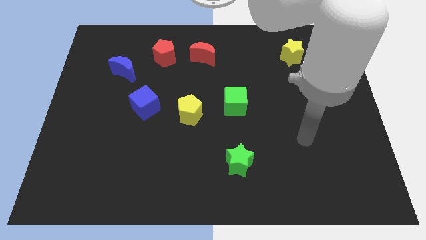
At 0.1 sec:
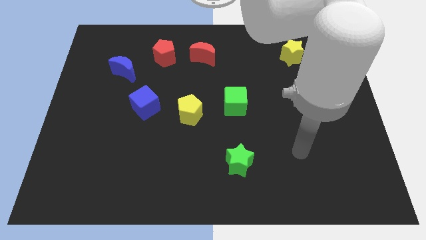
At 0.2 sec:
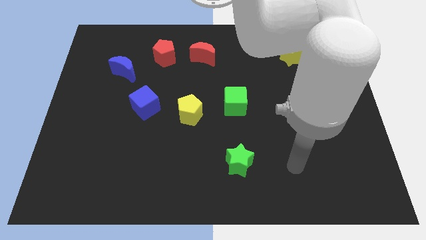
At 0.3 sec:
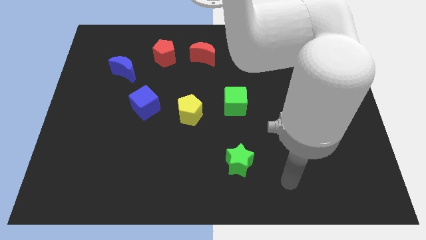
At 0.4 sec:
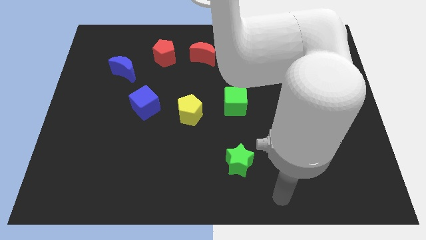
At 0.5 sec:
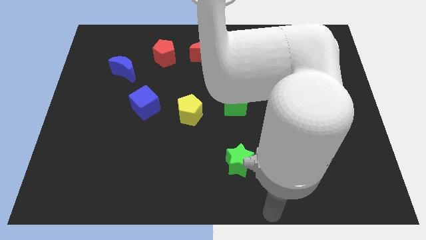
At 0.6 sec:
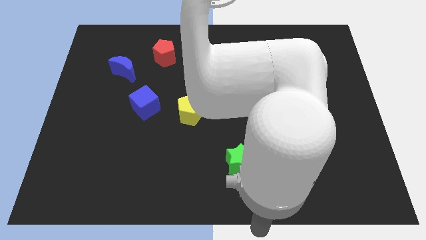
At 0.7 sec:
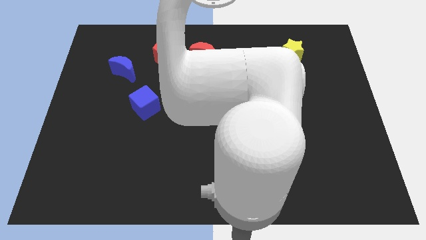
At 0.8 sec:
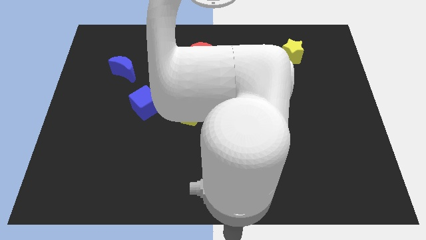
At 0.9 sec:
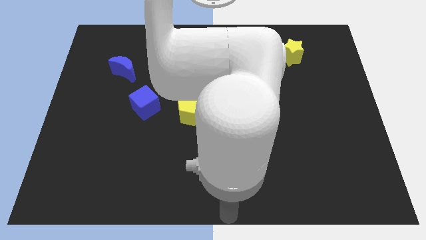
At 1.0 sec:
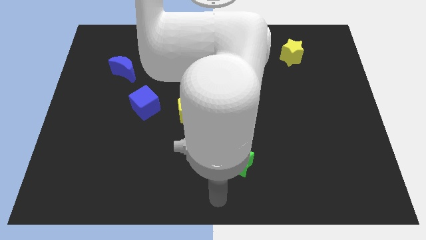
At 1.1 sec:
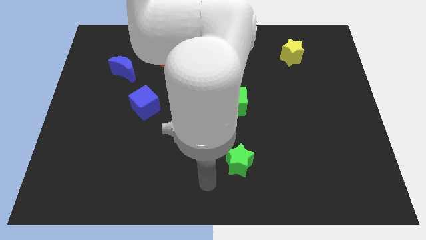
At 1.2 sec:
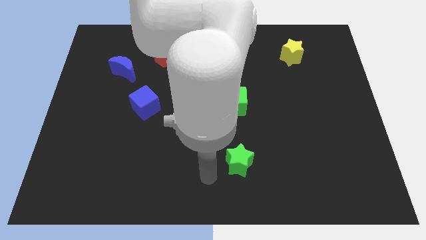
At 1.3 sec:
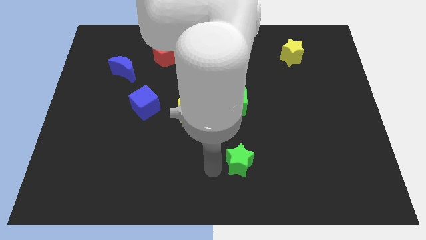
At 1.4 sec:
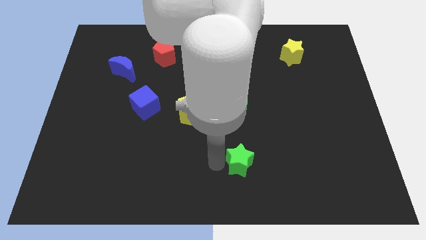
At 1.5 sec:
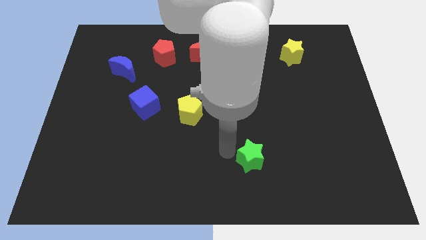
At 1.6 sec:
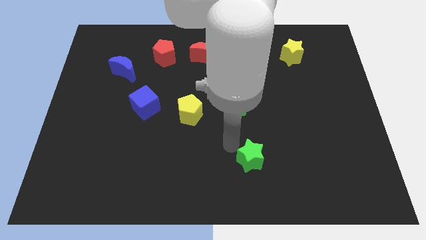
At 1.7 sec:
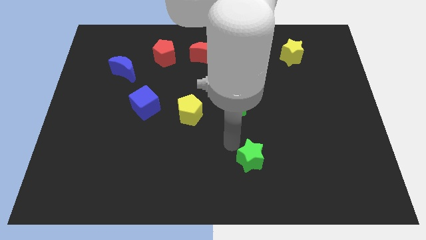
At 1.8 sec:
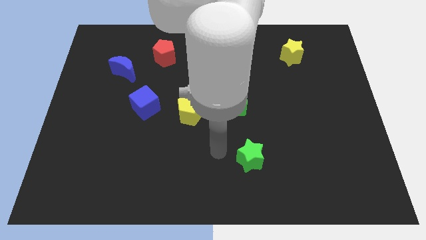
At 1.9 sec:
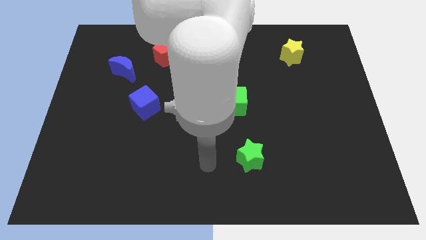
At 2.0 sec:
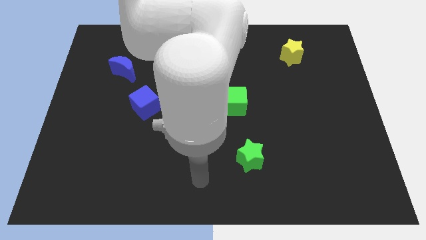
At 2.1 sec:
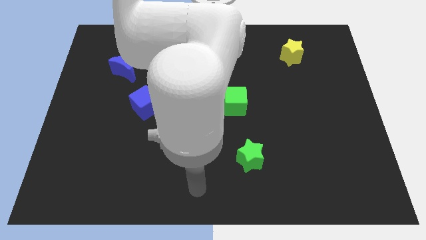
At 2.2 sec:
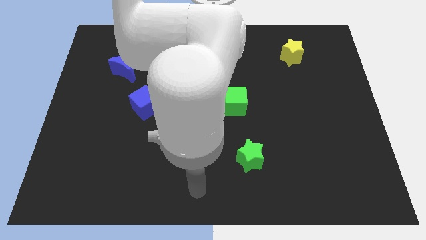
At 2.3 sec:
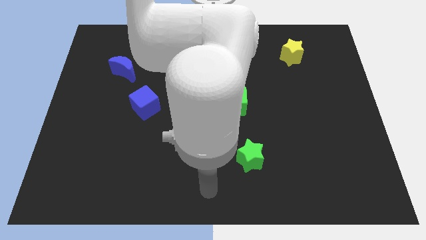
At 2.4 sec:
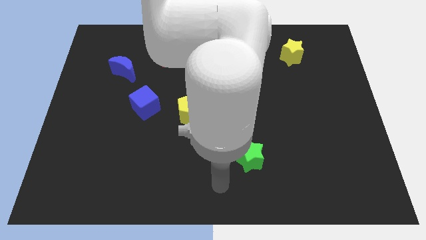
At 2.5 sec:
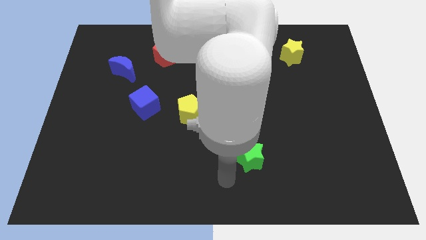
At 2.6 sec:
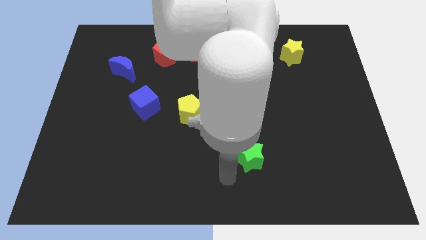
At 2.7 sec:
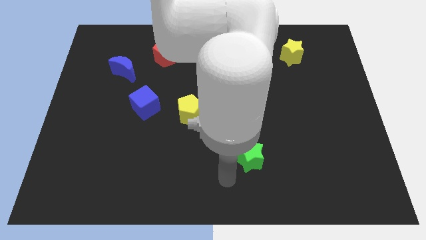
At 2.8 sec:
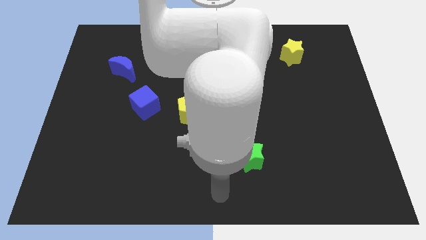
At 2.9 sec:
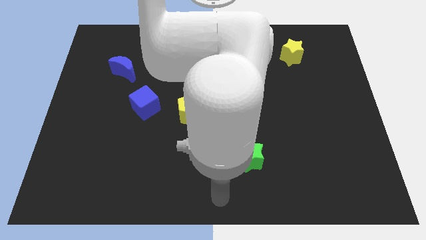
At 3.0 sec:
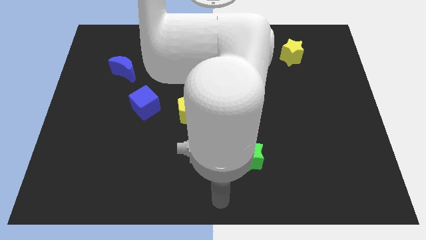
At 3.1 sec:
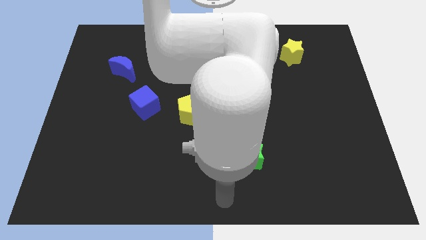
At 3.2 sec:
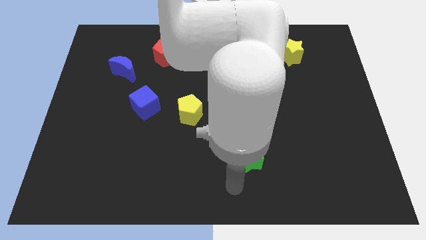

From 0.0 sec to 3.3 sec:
place your arm below green star

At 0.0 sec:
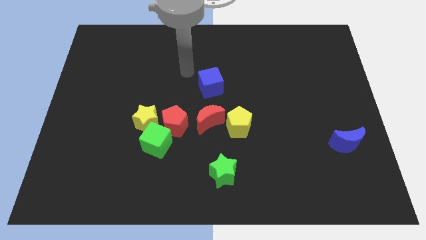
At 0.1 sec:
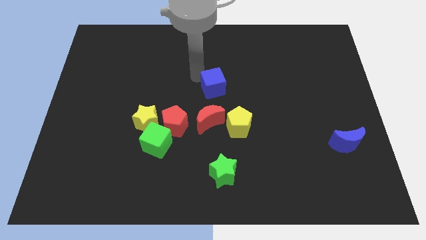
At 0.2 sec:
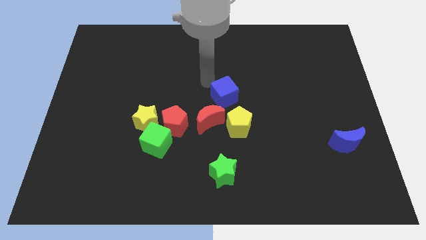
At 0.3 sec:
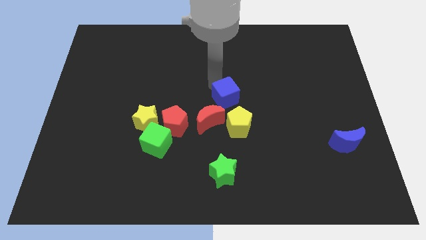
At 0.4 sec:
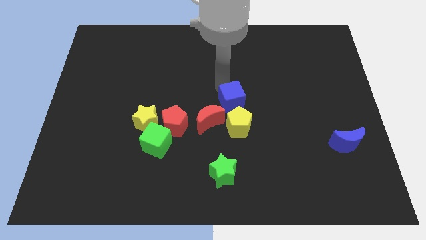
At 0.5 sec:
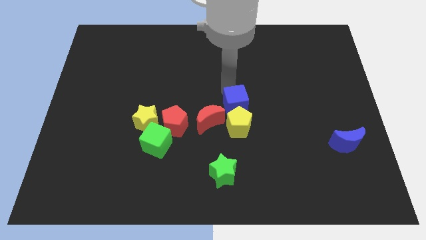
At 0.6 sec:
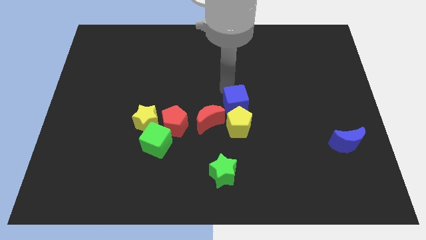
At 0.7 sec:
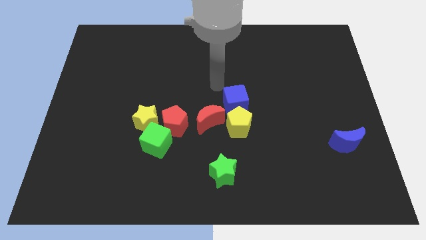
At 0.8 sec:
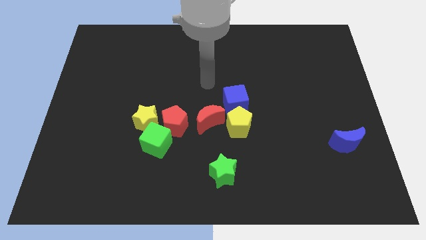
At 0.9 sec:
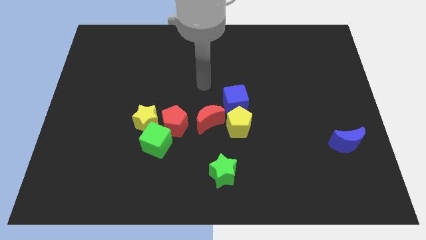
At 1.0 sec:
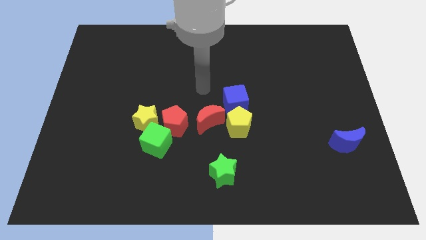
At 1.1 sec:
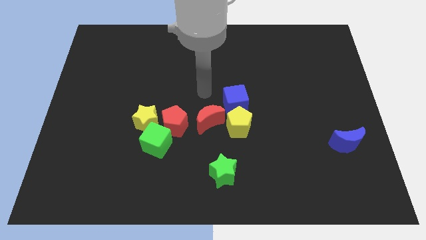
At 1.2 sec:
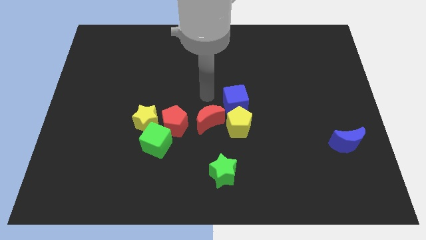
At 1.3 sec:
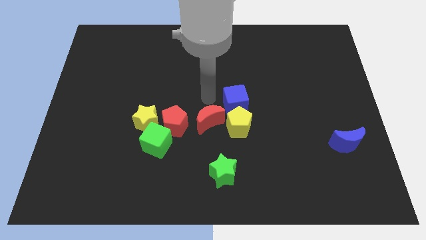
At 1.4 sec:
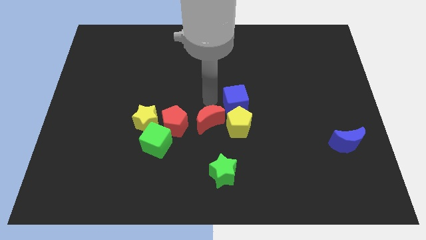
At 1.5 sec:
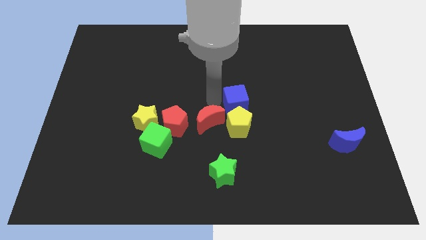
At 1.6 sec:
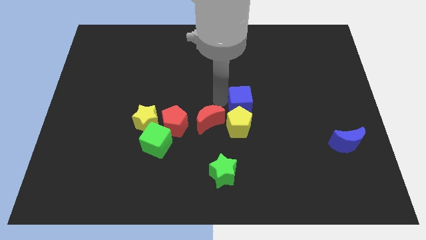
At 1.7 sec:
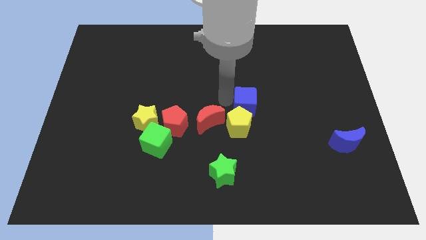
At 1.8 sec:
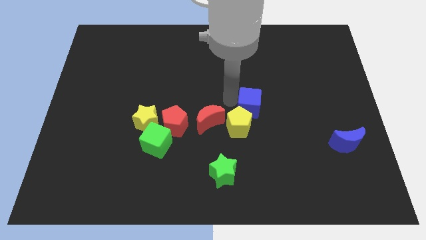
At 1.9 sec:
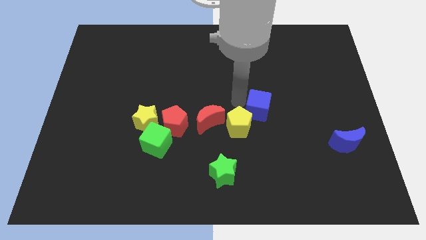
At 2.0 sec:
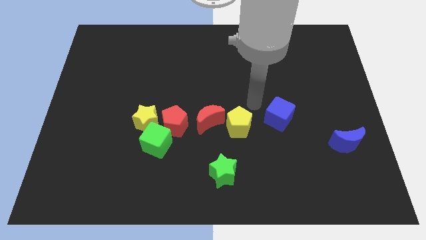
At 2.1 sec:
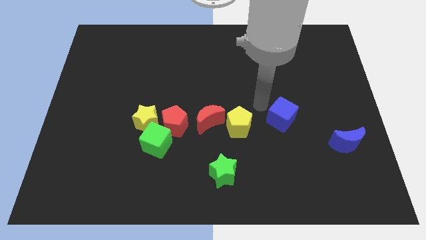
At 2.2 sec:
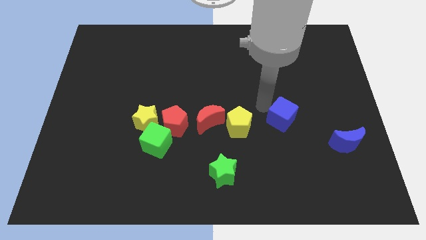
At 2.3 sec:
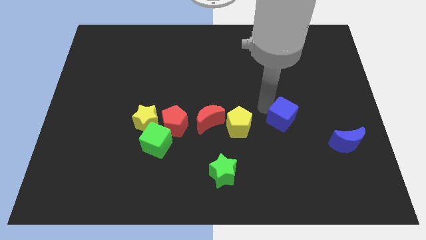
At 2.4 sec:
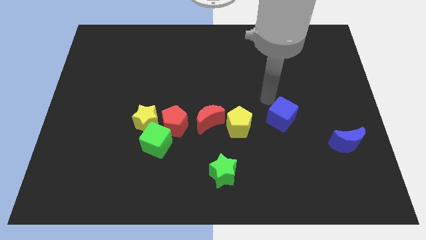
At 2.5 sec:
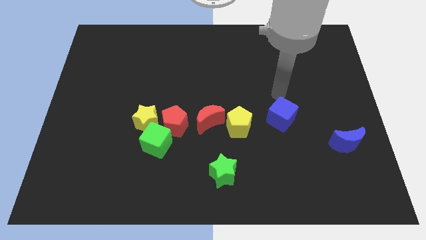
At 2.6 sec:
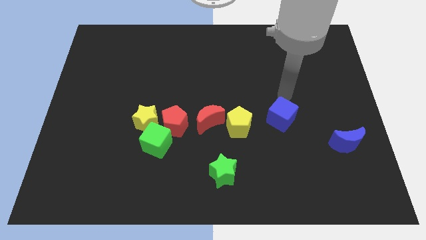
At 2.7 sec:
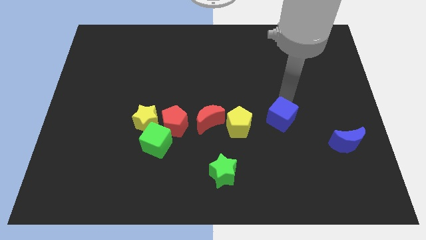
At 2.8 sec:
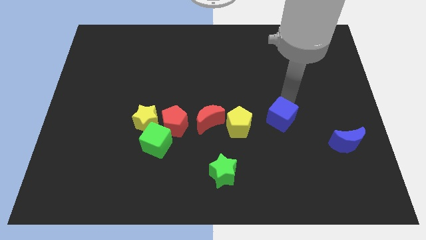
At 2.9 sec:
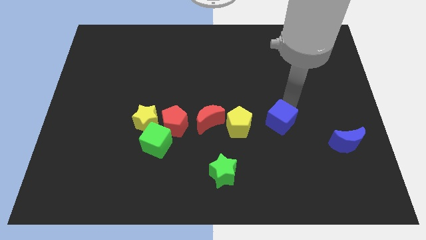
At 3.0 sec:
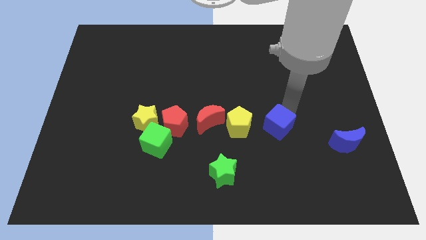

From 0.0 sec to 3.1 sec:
place the blue cube to the right of the yellow pentagon

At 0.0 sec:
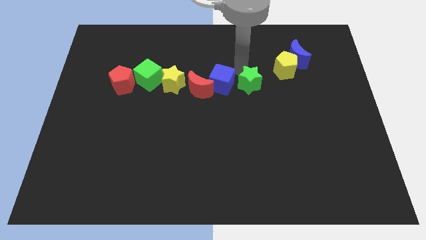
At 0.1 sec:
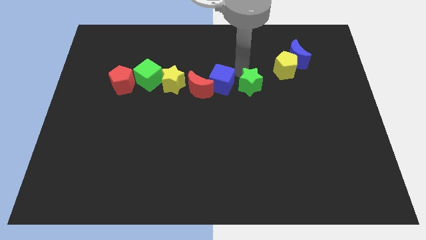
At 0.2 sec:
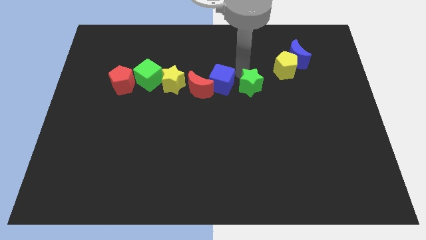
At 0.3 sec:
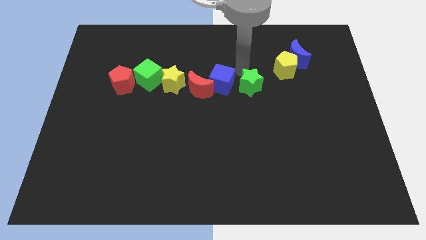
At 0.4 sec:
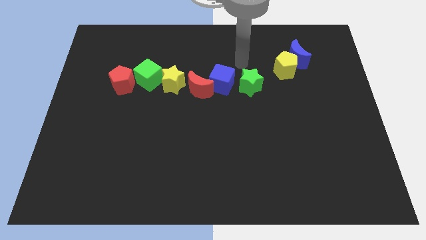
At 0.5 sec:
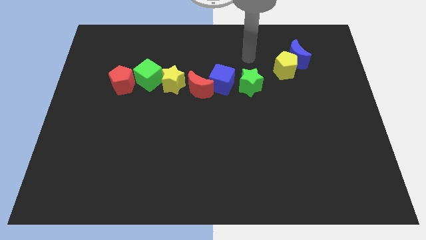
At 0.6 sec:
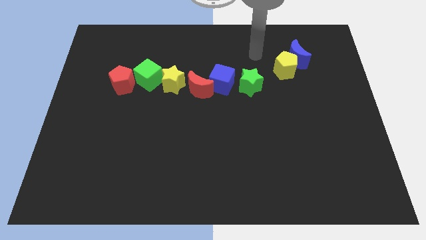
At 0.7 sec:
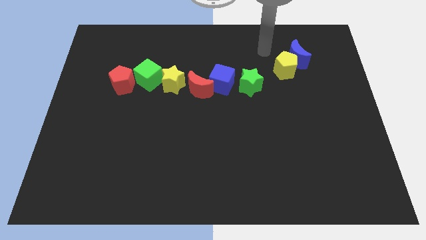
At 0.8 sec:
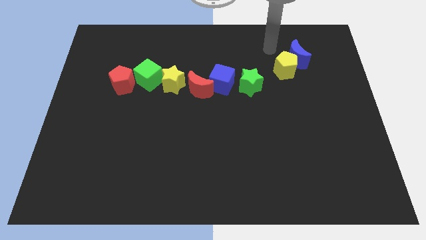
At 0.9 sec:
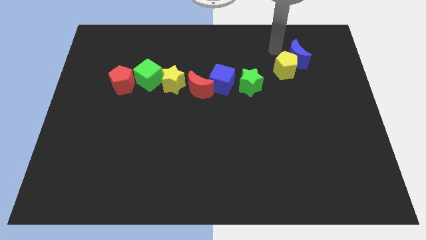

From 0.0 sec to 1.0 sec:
push the green star slightly towards down

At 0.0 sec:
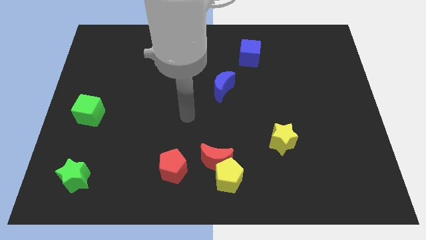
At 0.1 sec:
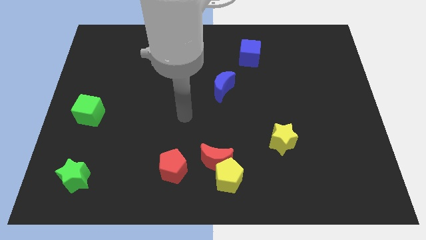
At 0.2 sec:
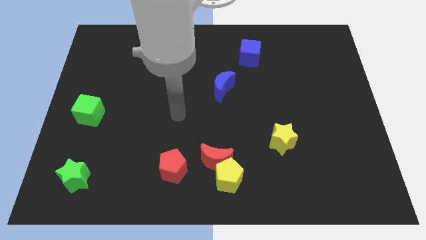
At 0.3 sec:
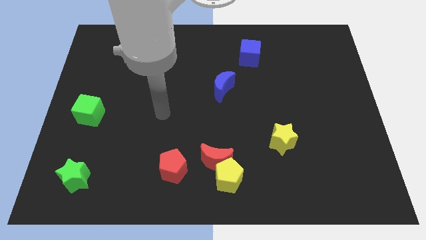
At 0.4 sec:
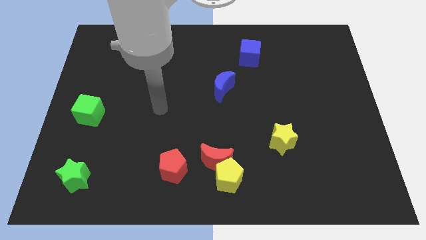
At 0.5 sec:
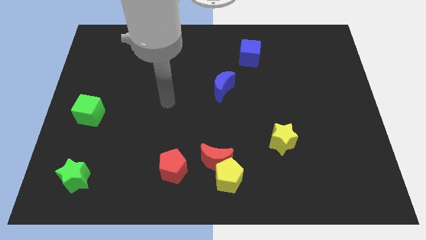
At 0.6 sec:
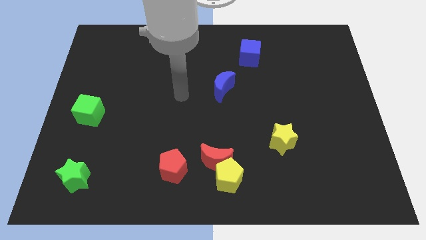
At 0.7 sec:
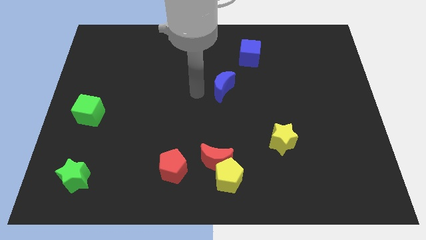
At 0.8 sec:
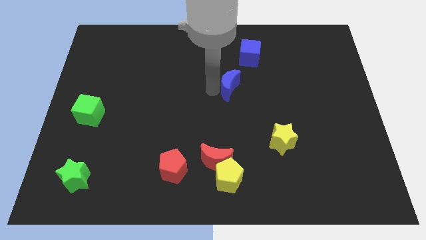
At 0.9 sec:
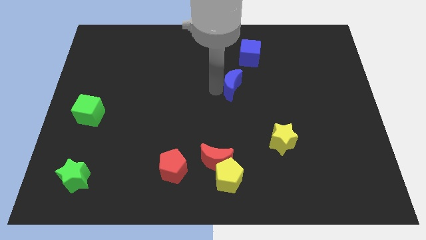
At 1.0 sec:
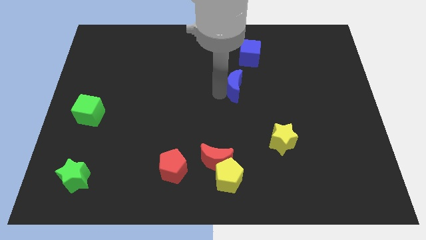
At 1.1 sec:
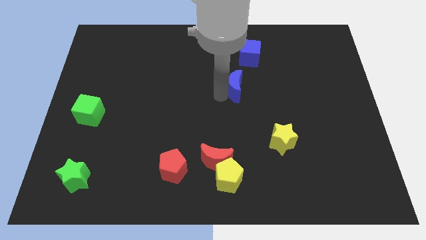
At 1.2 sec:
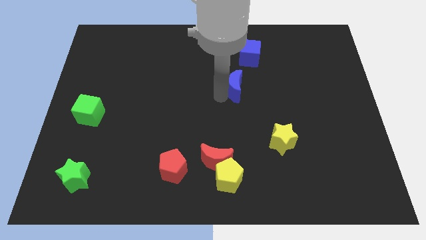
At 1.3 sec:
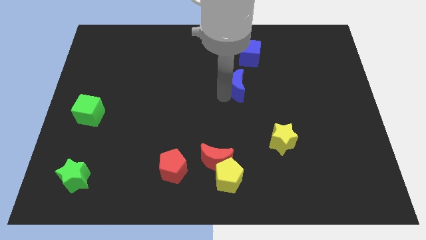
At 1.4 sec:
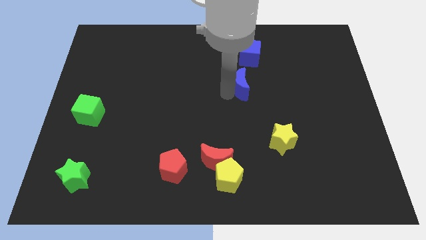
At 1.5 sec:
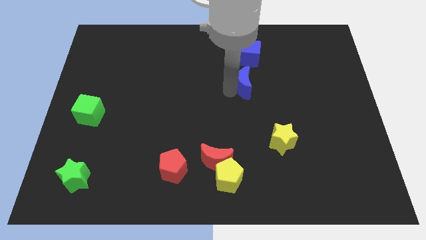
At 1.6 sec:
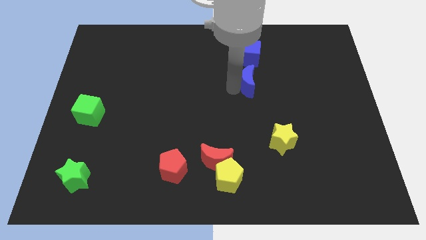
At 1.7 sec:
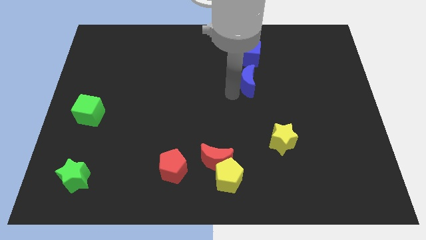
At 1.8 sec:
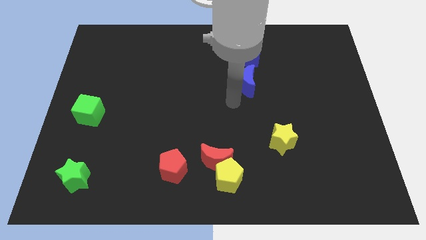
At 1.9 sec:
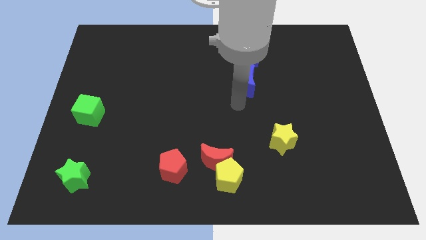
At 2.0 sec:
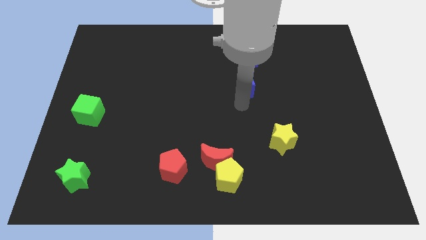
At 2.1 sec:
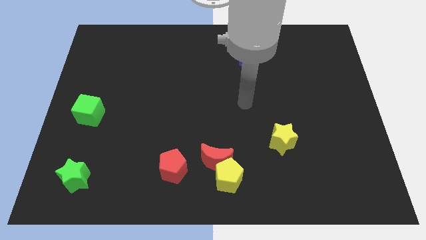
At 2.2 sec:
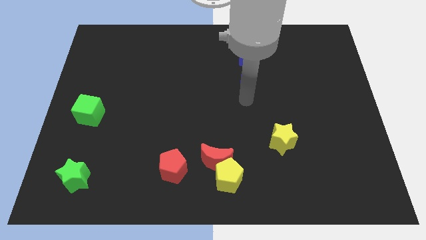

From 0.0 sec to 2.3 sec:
place the blue moon below the blue cube
